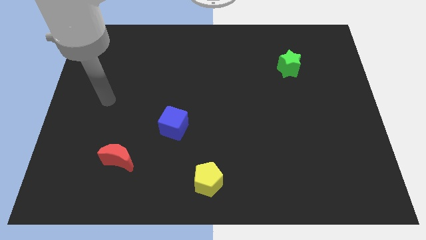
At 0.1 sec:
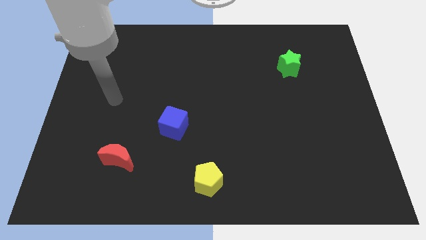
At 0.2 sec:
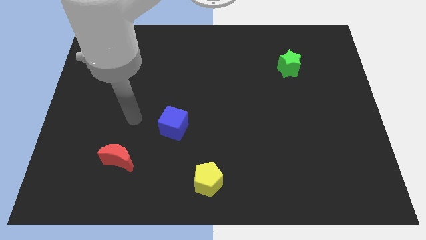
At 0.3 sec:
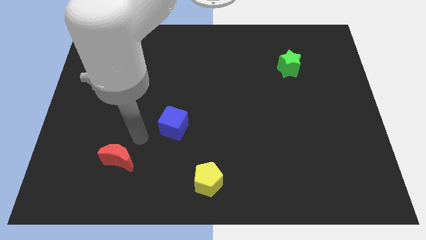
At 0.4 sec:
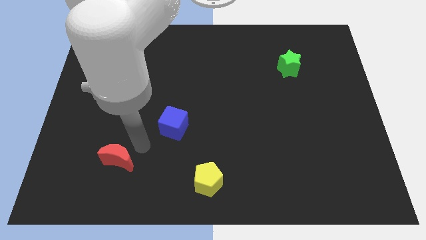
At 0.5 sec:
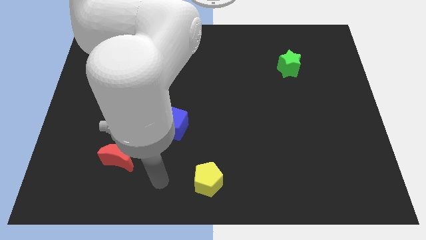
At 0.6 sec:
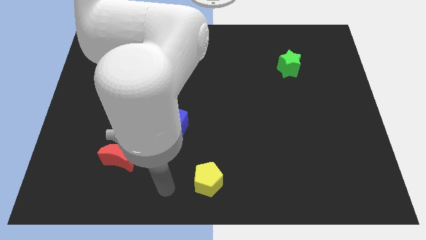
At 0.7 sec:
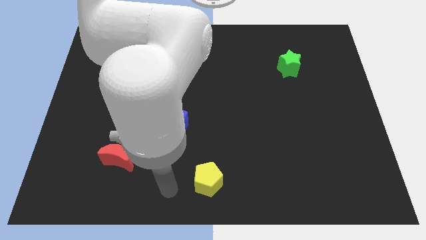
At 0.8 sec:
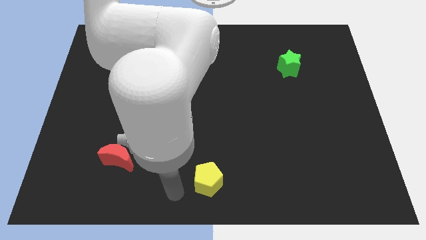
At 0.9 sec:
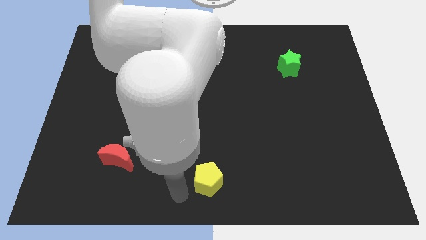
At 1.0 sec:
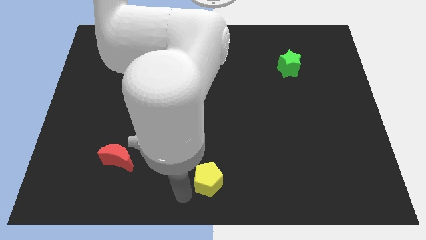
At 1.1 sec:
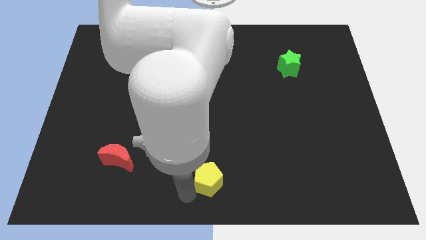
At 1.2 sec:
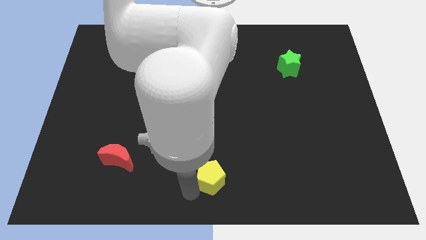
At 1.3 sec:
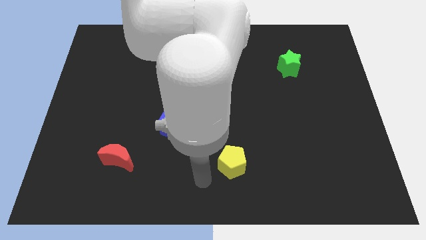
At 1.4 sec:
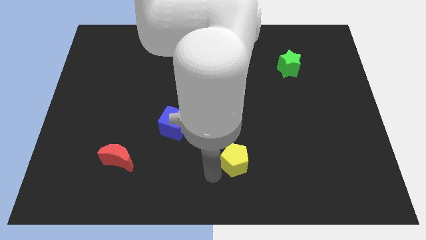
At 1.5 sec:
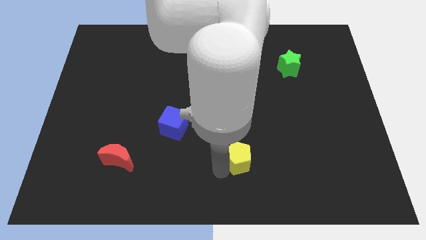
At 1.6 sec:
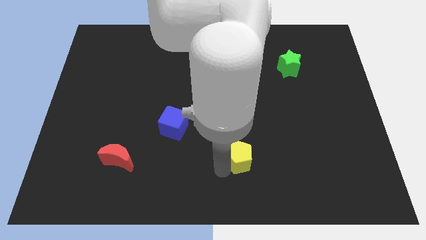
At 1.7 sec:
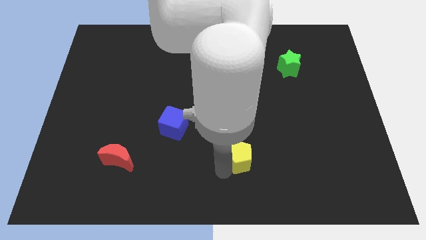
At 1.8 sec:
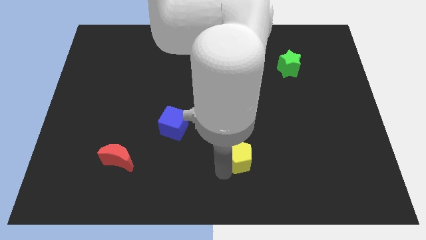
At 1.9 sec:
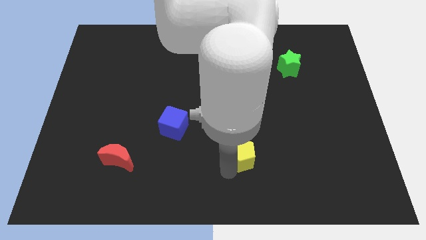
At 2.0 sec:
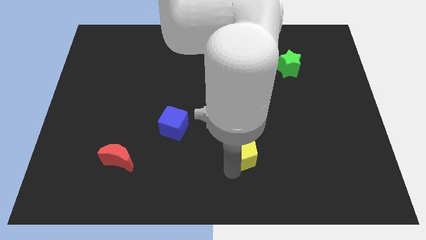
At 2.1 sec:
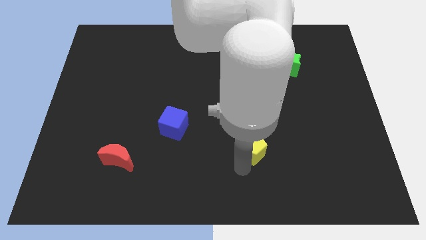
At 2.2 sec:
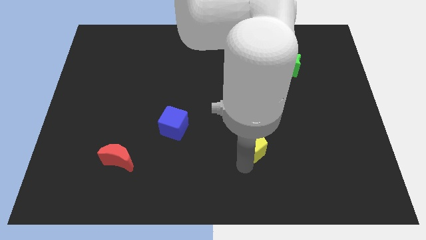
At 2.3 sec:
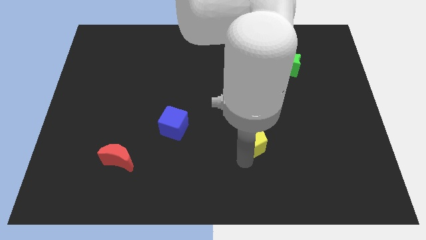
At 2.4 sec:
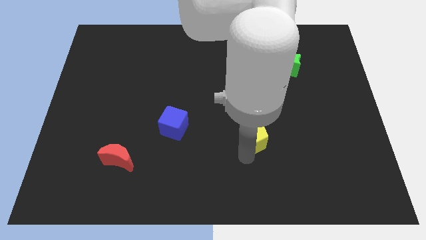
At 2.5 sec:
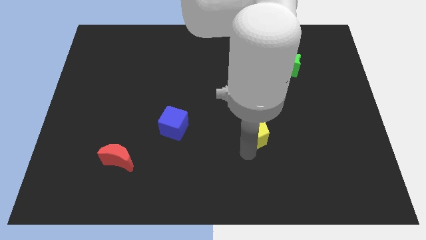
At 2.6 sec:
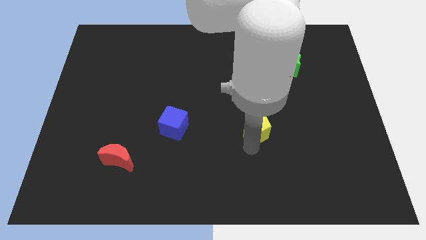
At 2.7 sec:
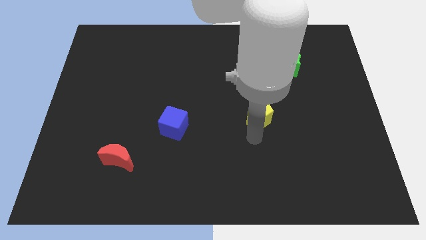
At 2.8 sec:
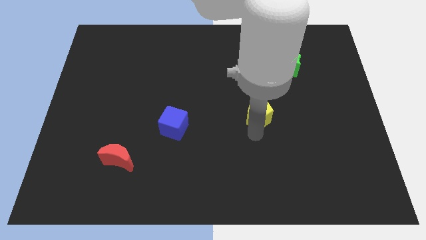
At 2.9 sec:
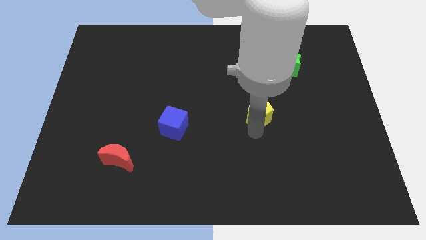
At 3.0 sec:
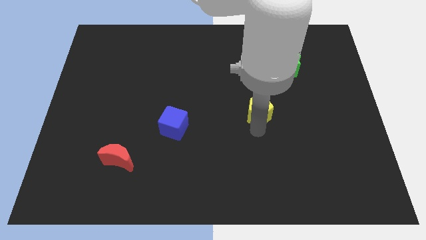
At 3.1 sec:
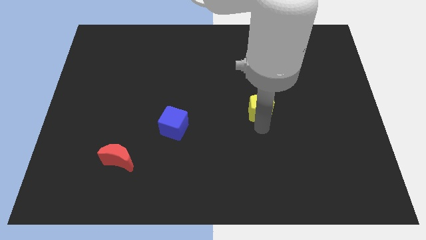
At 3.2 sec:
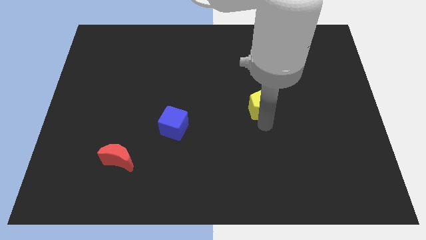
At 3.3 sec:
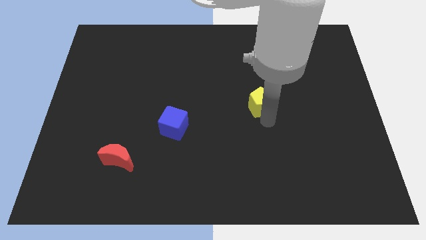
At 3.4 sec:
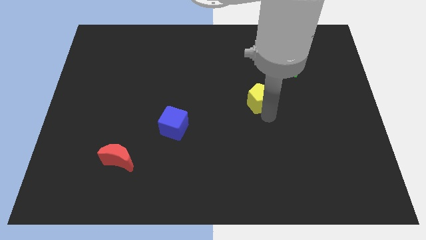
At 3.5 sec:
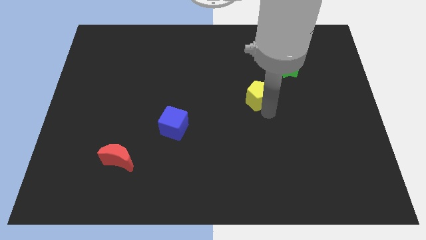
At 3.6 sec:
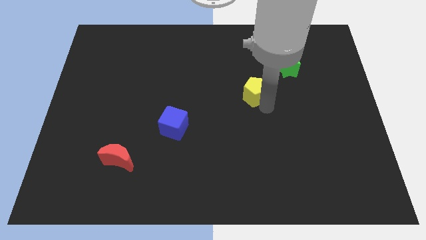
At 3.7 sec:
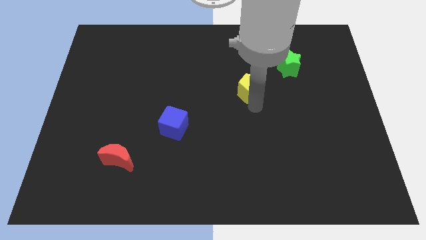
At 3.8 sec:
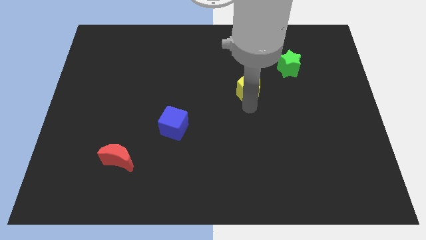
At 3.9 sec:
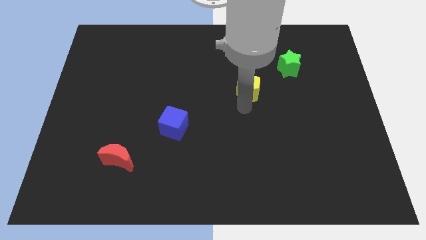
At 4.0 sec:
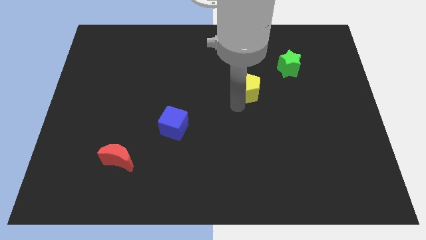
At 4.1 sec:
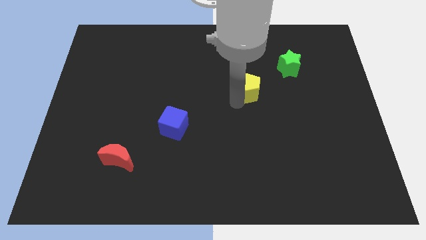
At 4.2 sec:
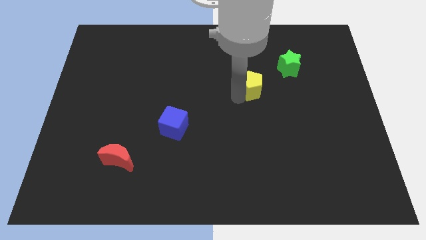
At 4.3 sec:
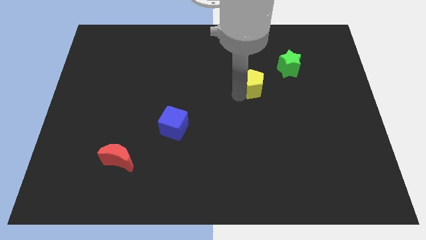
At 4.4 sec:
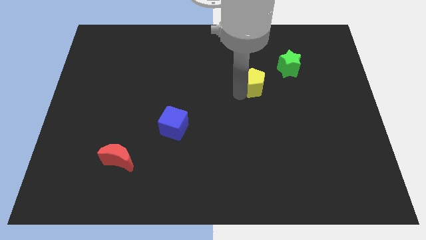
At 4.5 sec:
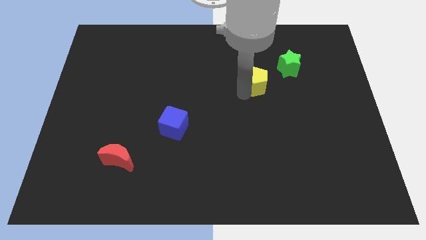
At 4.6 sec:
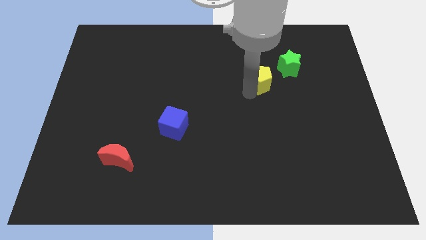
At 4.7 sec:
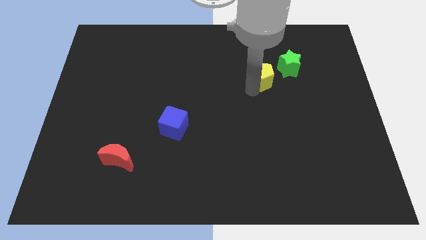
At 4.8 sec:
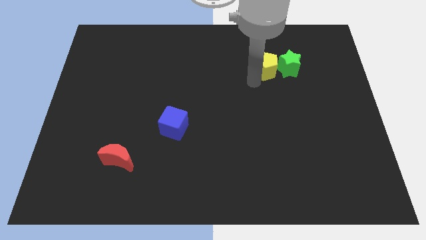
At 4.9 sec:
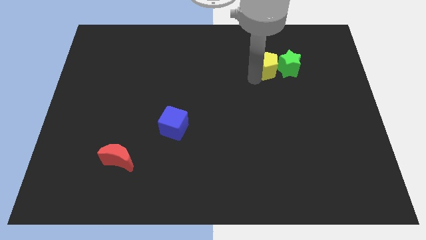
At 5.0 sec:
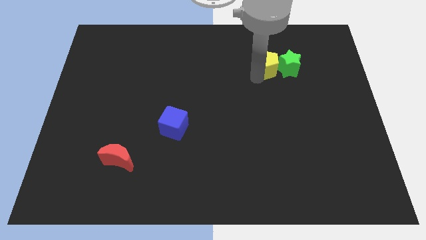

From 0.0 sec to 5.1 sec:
slide the yellow block towards the star

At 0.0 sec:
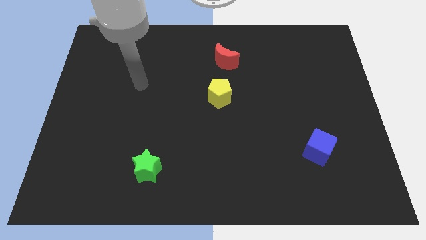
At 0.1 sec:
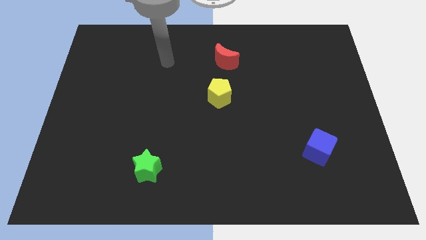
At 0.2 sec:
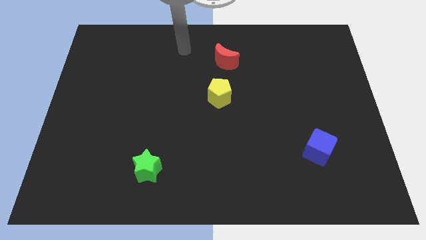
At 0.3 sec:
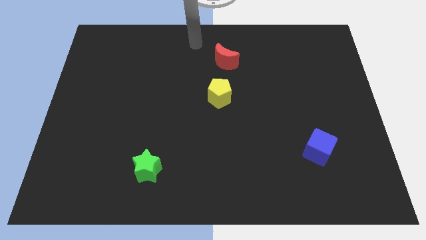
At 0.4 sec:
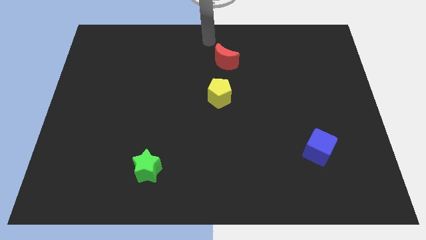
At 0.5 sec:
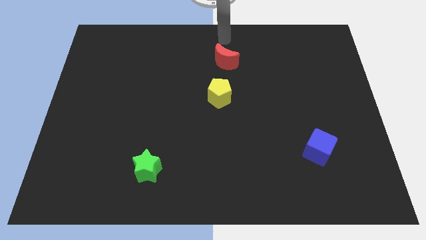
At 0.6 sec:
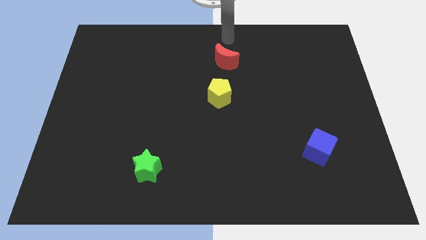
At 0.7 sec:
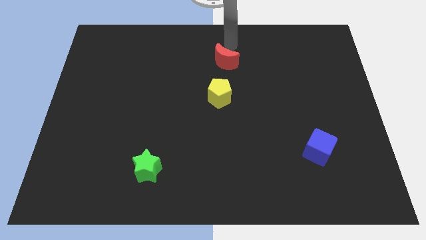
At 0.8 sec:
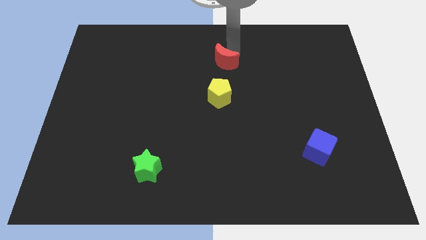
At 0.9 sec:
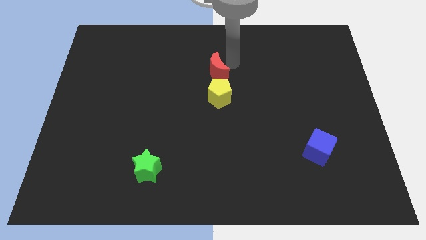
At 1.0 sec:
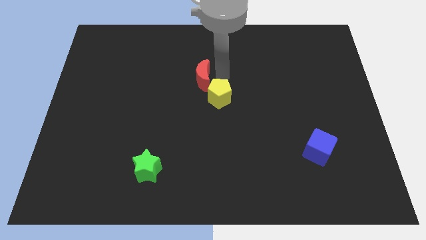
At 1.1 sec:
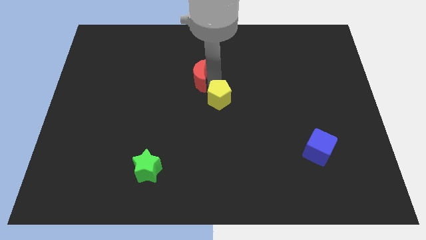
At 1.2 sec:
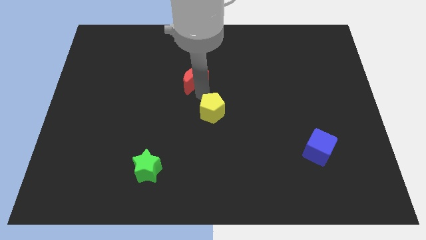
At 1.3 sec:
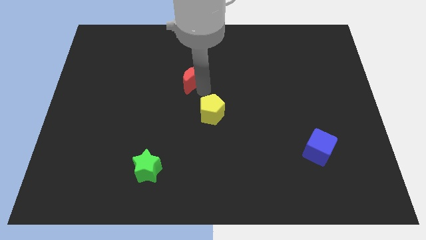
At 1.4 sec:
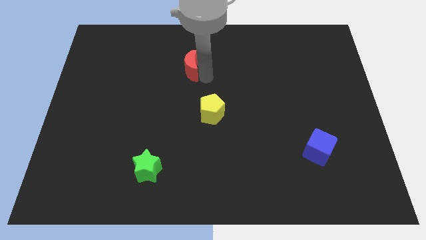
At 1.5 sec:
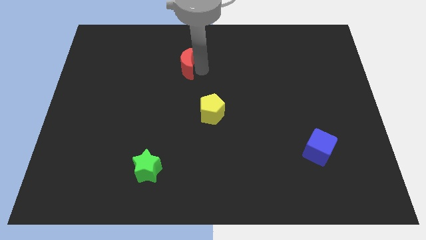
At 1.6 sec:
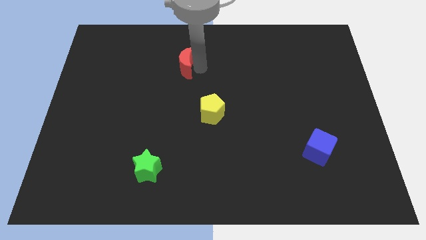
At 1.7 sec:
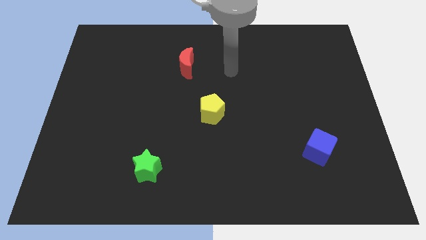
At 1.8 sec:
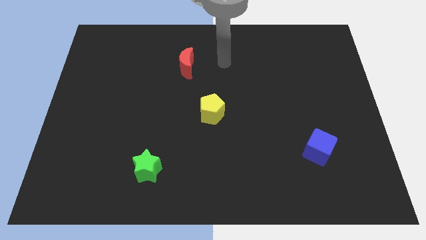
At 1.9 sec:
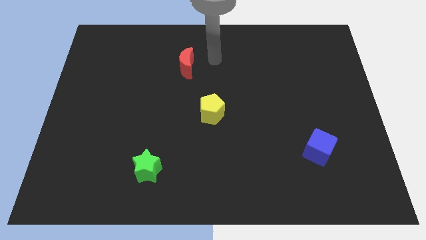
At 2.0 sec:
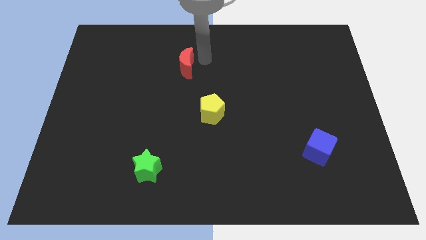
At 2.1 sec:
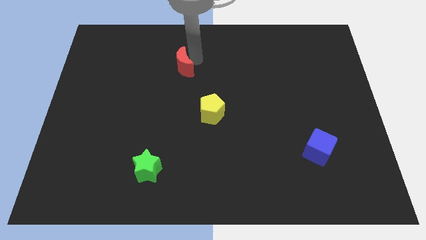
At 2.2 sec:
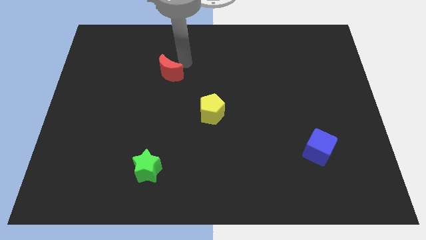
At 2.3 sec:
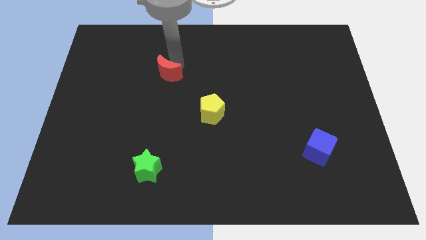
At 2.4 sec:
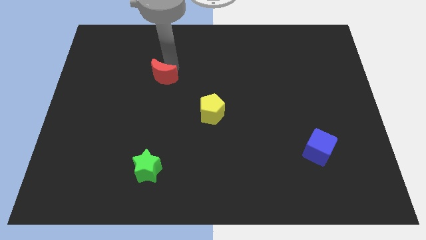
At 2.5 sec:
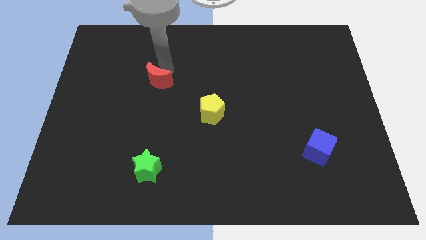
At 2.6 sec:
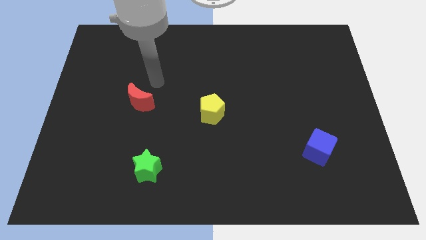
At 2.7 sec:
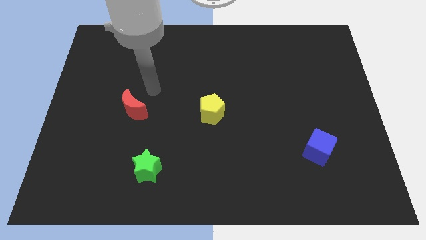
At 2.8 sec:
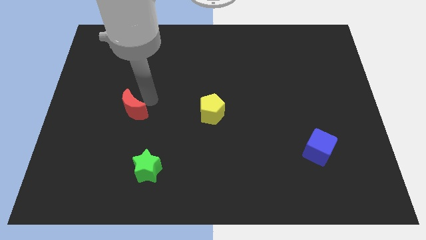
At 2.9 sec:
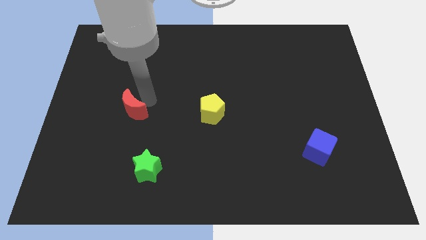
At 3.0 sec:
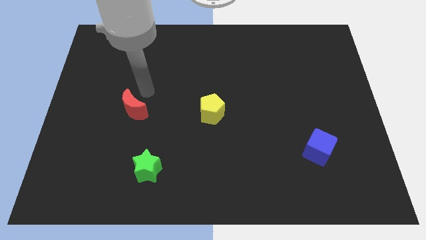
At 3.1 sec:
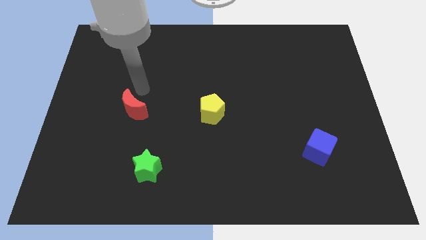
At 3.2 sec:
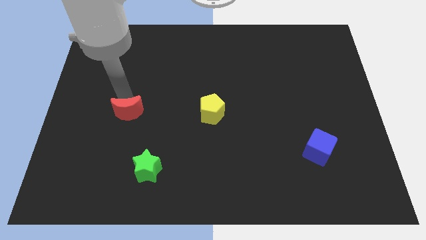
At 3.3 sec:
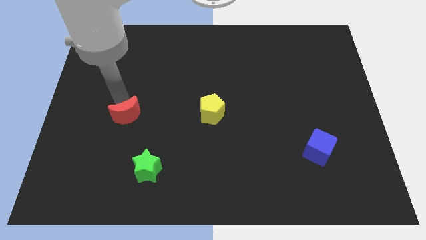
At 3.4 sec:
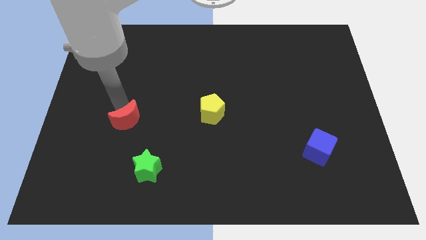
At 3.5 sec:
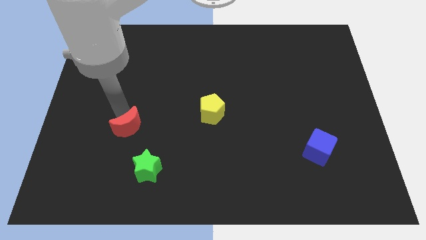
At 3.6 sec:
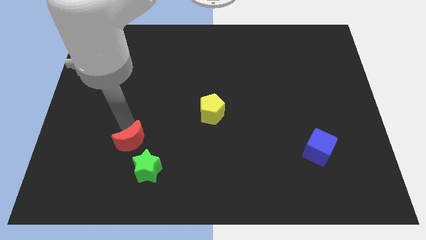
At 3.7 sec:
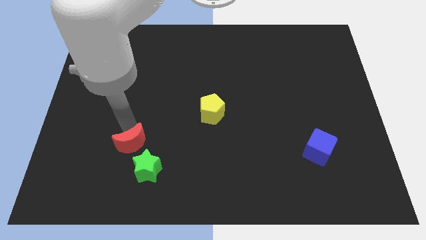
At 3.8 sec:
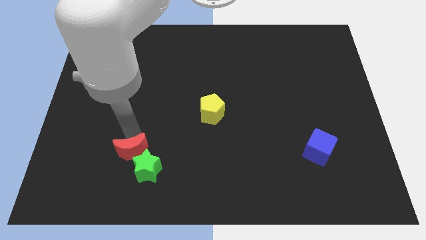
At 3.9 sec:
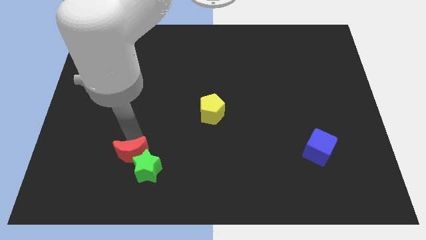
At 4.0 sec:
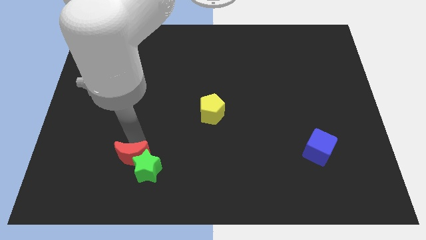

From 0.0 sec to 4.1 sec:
slide the moon next to the green block
